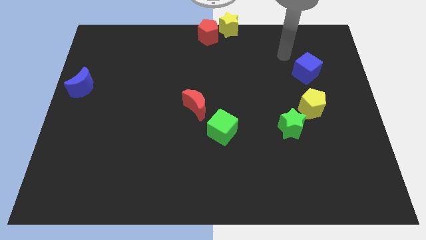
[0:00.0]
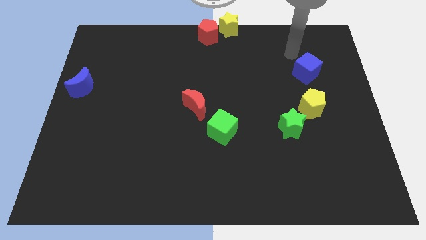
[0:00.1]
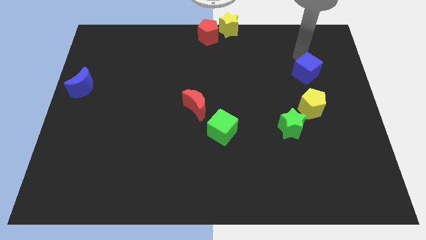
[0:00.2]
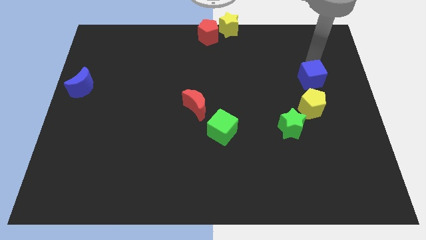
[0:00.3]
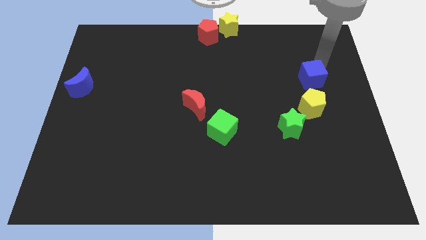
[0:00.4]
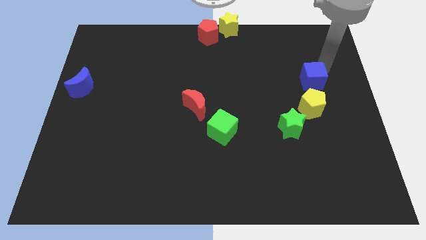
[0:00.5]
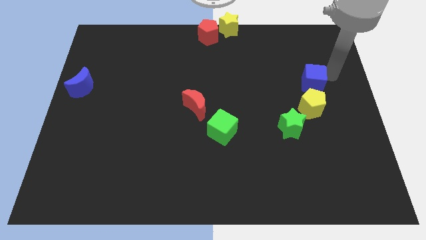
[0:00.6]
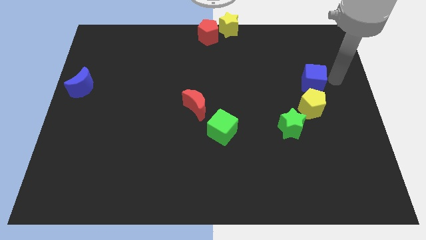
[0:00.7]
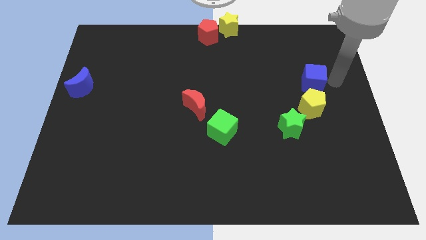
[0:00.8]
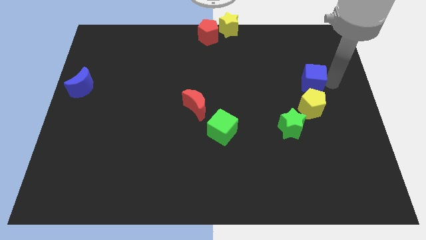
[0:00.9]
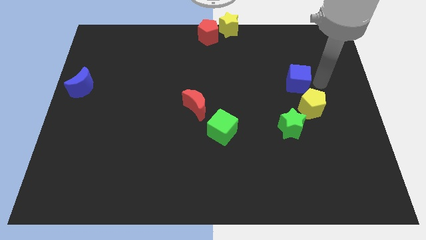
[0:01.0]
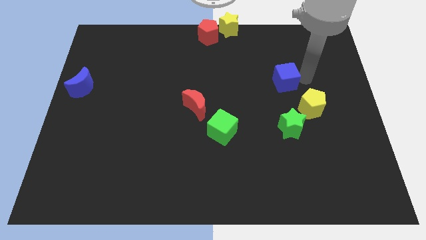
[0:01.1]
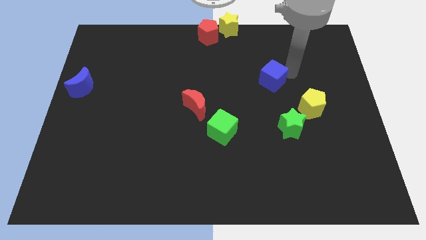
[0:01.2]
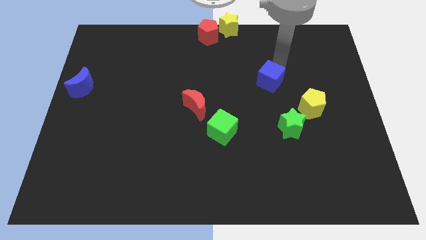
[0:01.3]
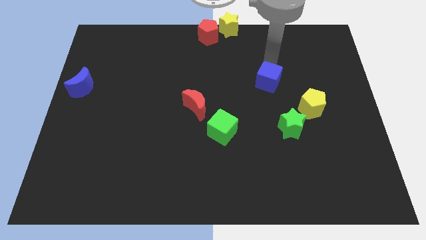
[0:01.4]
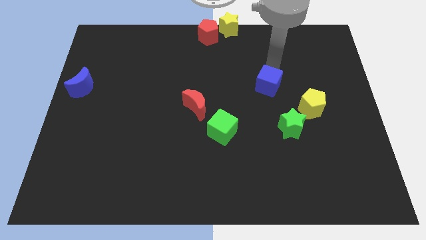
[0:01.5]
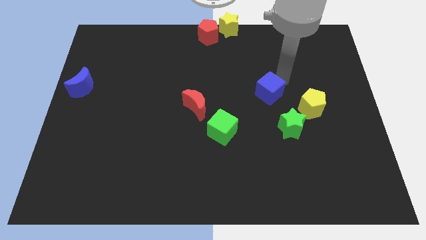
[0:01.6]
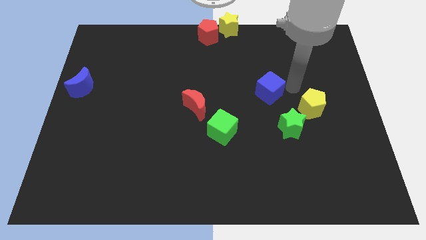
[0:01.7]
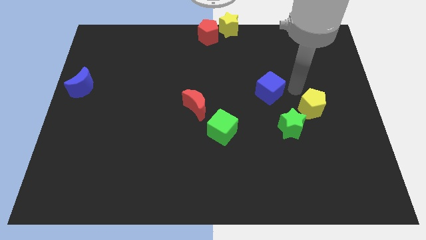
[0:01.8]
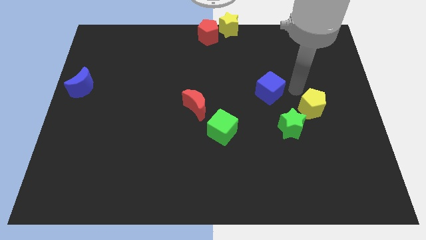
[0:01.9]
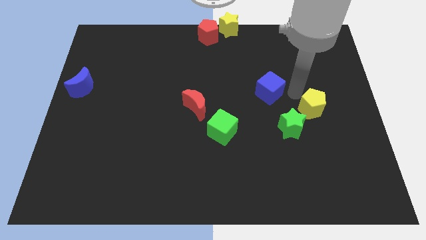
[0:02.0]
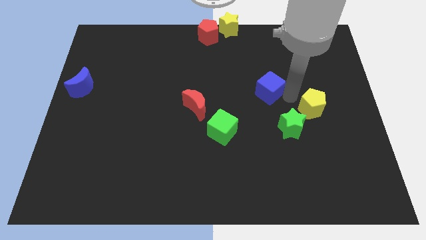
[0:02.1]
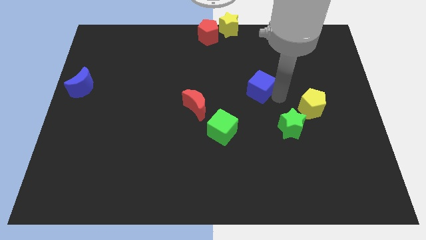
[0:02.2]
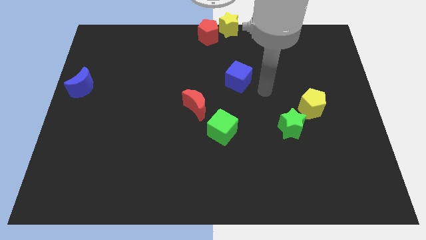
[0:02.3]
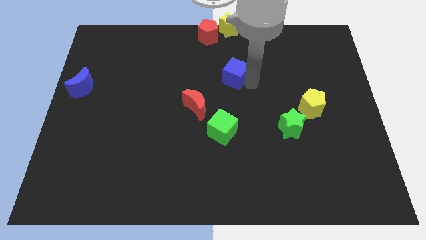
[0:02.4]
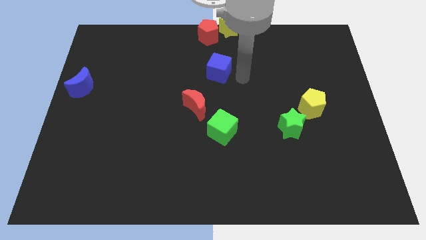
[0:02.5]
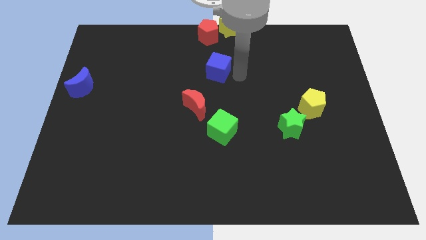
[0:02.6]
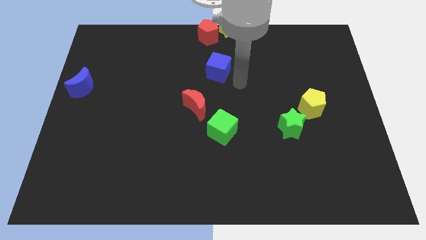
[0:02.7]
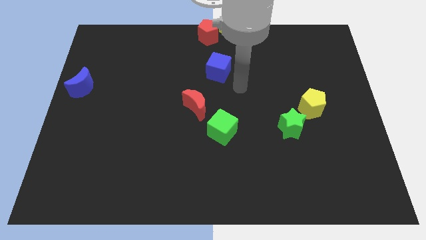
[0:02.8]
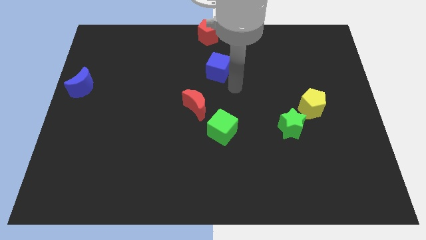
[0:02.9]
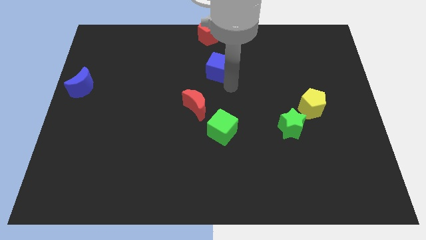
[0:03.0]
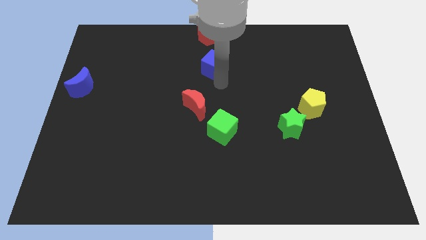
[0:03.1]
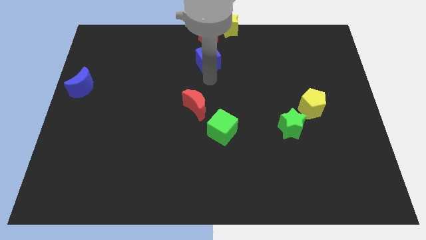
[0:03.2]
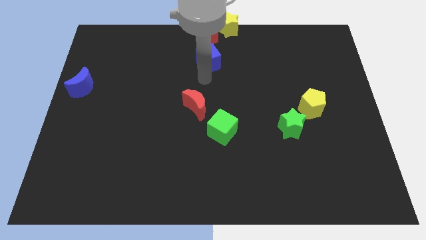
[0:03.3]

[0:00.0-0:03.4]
place the blue cube in between red pentagon and red moon

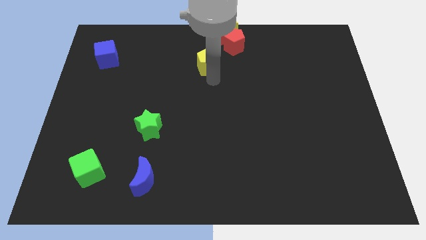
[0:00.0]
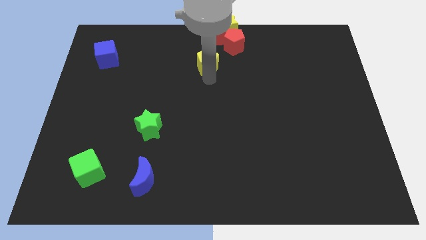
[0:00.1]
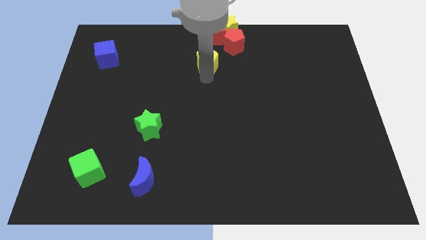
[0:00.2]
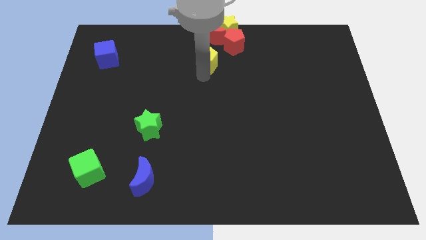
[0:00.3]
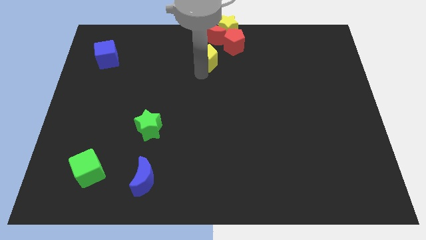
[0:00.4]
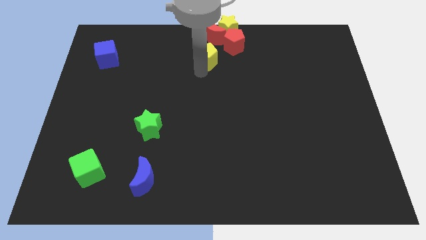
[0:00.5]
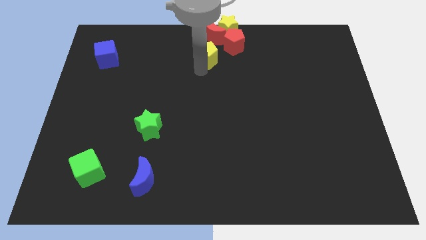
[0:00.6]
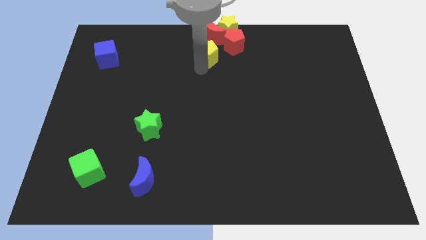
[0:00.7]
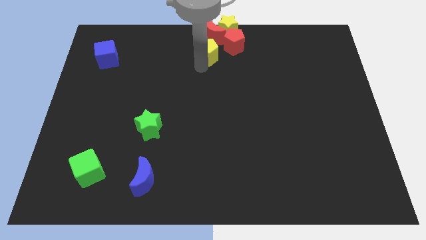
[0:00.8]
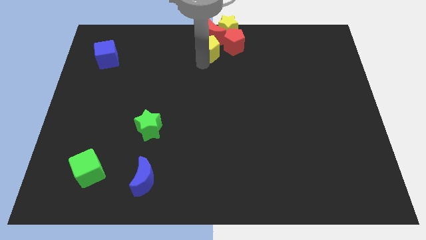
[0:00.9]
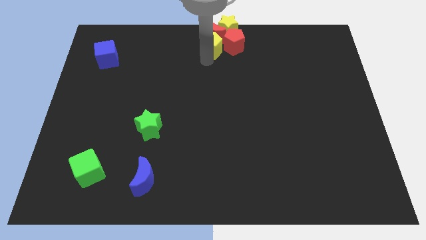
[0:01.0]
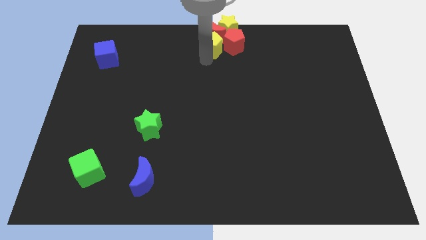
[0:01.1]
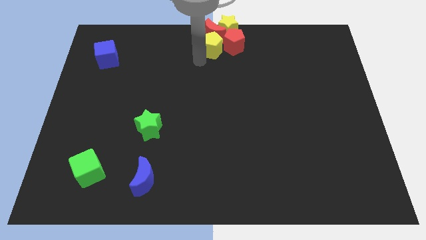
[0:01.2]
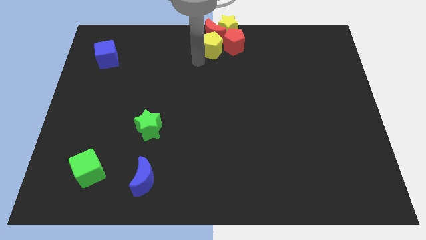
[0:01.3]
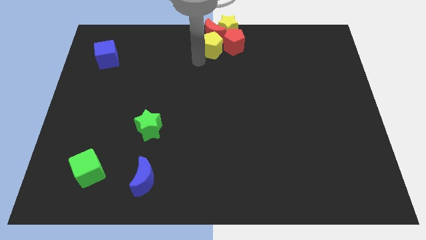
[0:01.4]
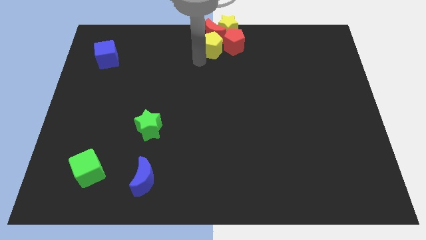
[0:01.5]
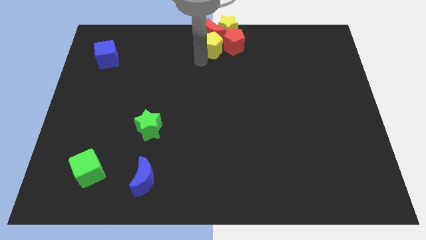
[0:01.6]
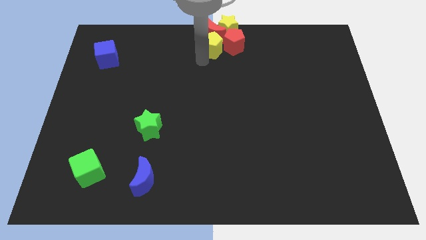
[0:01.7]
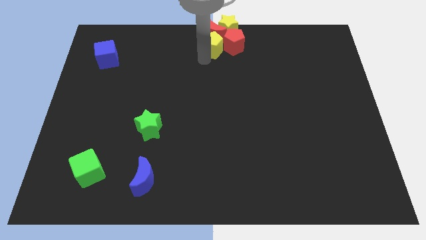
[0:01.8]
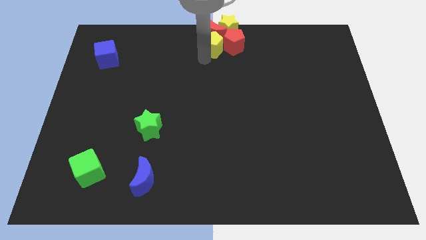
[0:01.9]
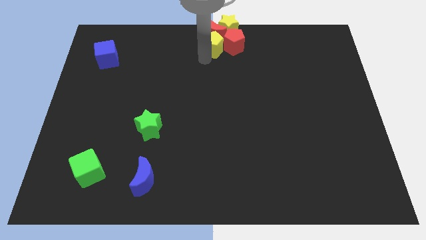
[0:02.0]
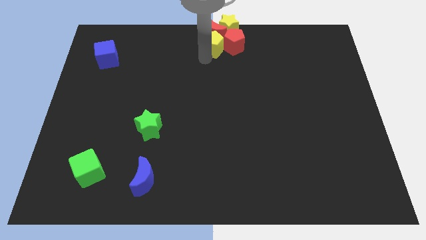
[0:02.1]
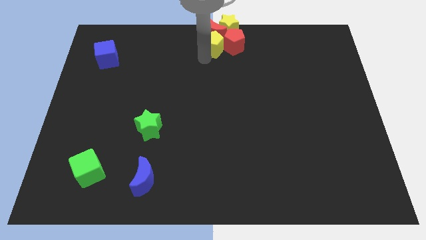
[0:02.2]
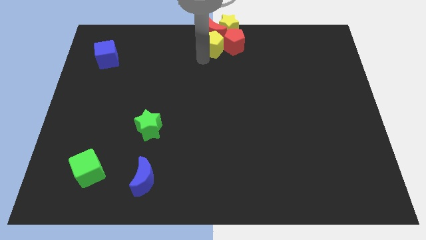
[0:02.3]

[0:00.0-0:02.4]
push the yellow pentagon into the red moon and red pentagon

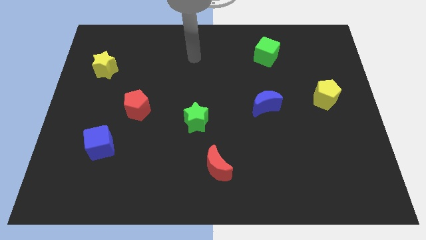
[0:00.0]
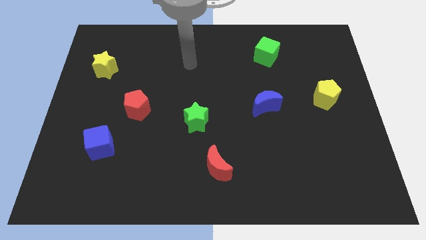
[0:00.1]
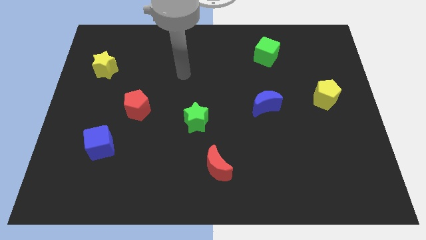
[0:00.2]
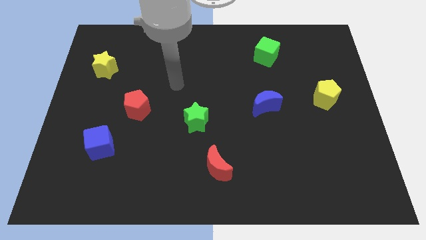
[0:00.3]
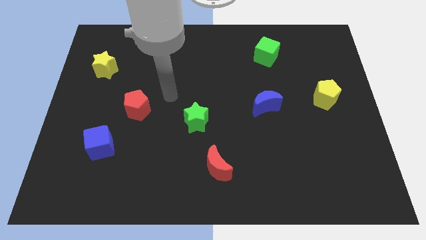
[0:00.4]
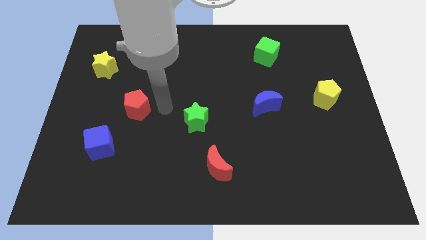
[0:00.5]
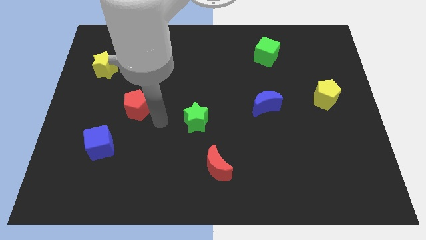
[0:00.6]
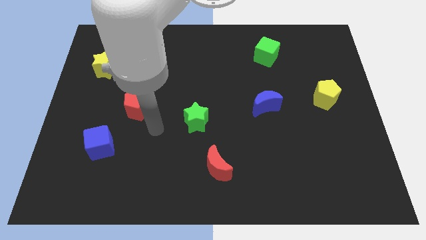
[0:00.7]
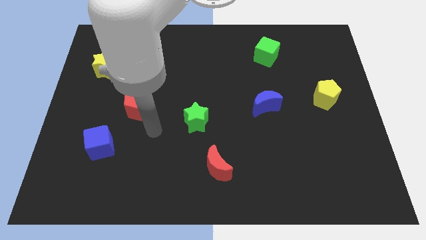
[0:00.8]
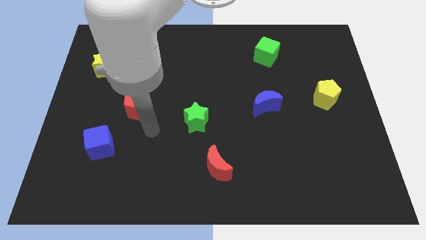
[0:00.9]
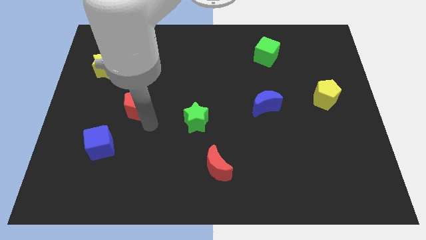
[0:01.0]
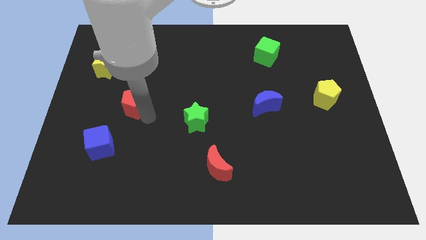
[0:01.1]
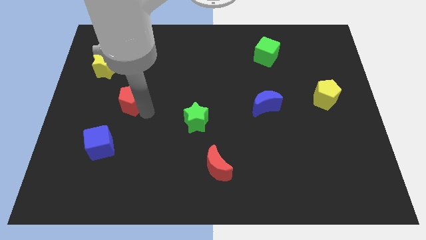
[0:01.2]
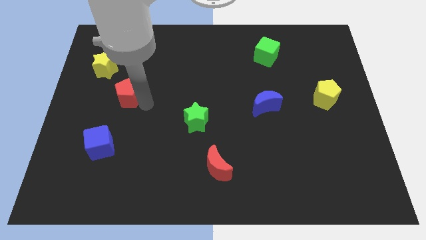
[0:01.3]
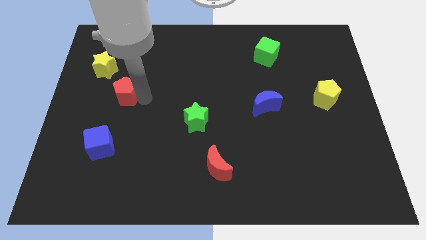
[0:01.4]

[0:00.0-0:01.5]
go to the red pentagon

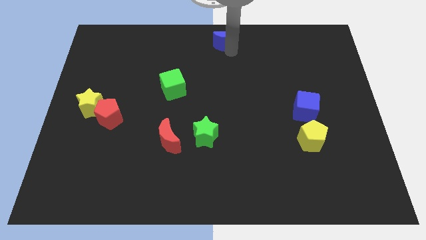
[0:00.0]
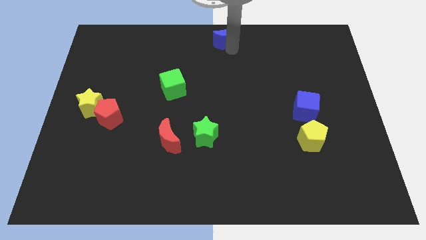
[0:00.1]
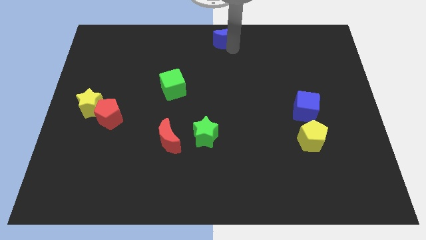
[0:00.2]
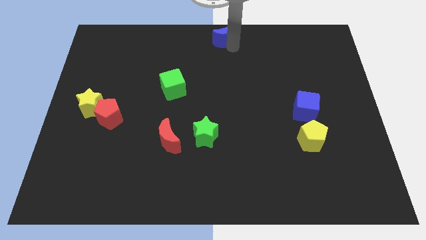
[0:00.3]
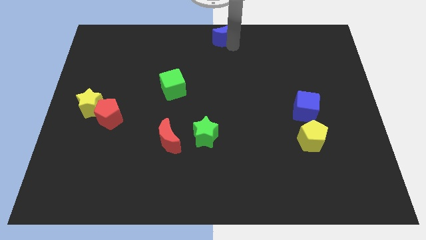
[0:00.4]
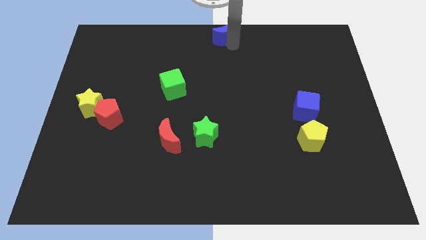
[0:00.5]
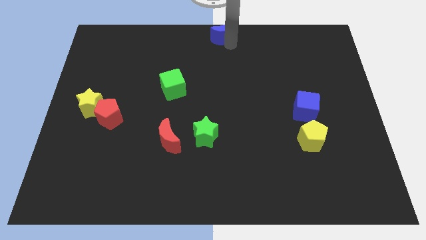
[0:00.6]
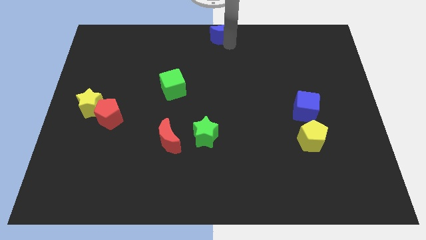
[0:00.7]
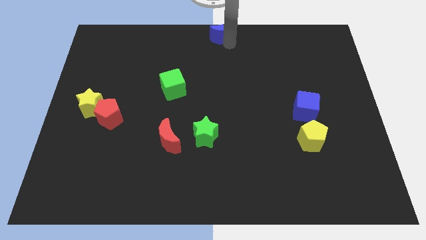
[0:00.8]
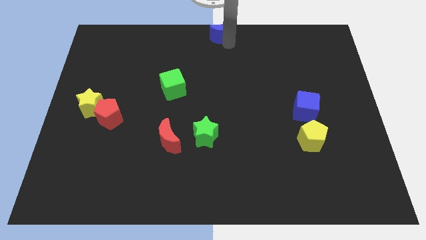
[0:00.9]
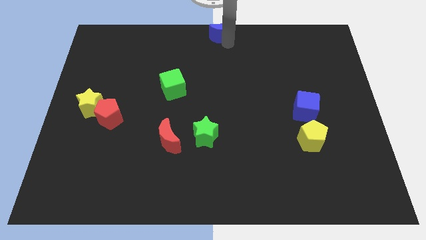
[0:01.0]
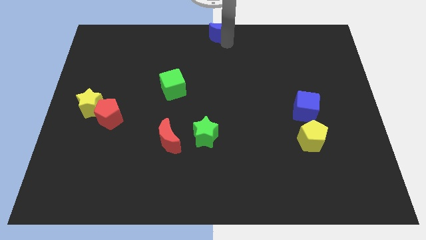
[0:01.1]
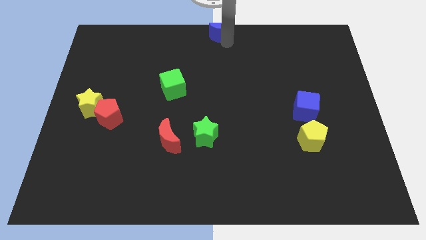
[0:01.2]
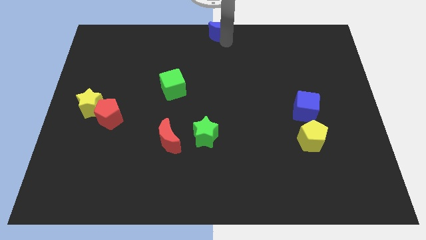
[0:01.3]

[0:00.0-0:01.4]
push blue moon to the top center

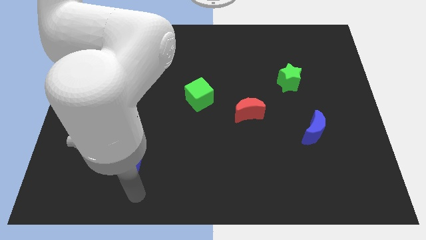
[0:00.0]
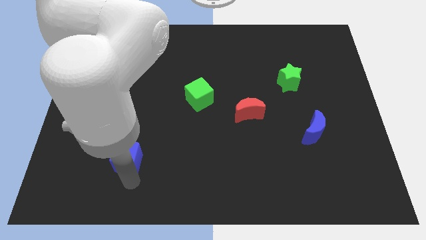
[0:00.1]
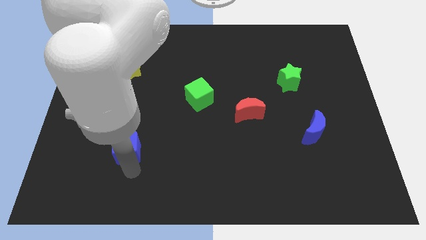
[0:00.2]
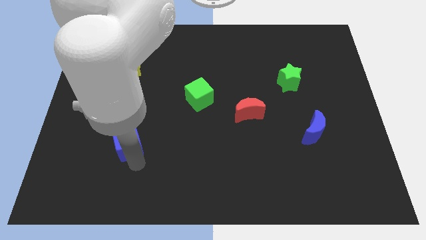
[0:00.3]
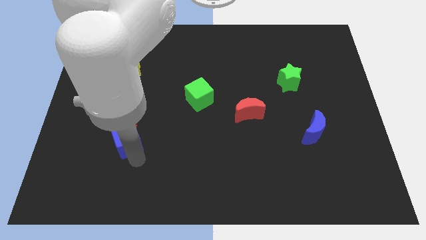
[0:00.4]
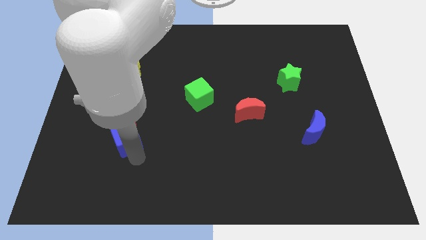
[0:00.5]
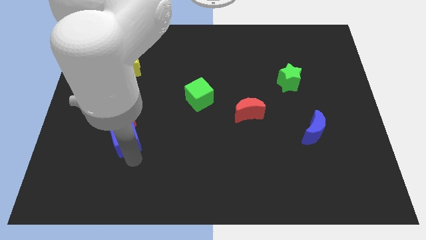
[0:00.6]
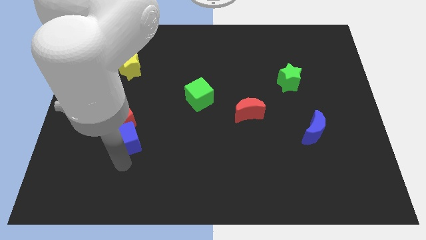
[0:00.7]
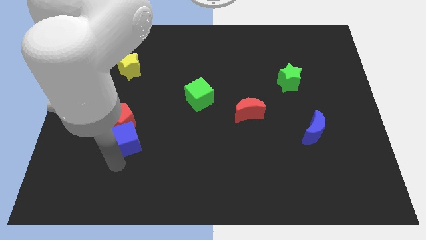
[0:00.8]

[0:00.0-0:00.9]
push the blue cube towards the red pentagon
